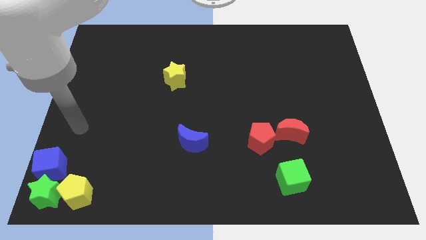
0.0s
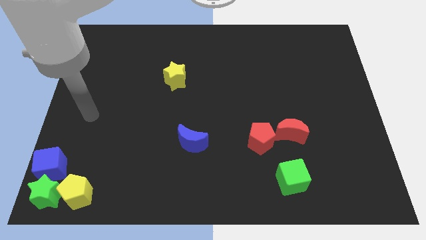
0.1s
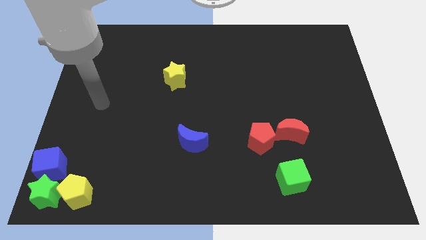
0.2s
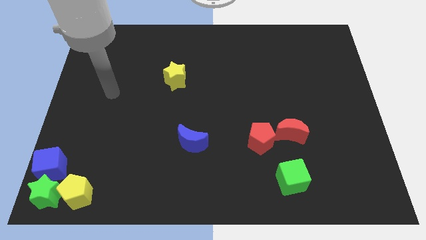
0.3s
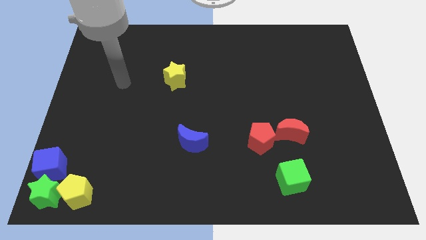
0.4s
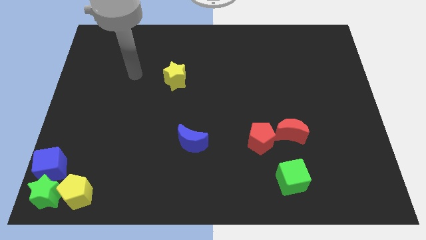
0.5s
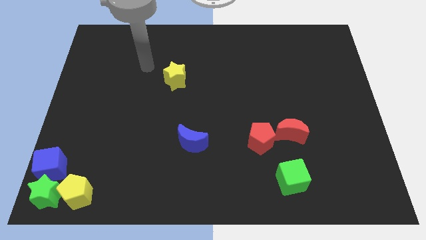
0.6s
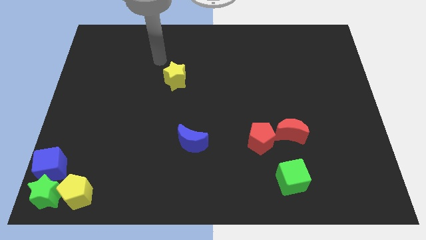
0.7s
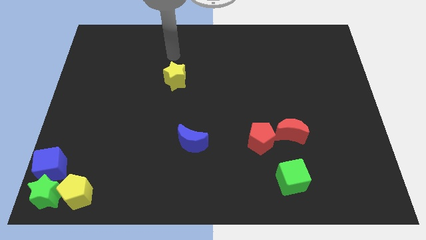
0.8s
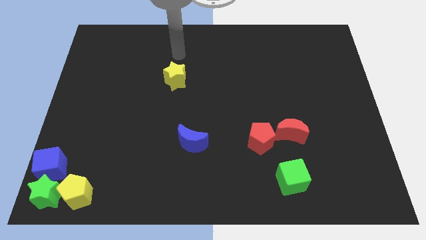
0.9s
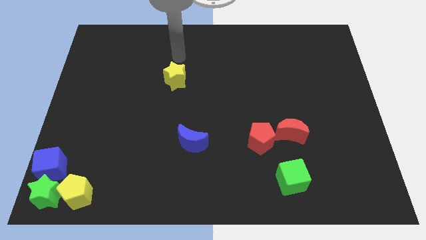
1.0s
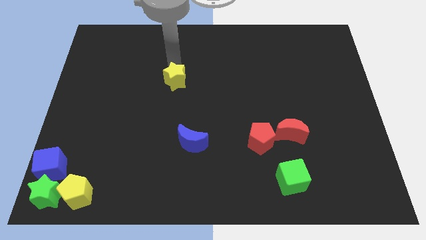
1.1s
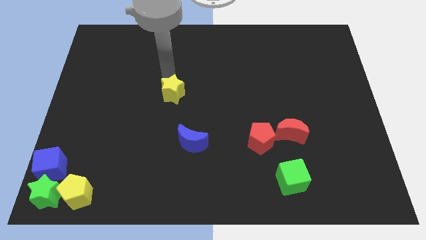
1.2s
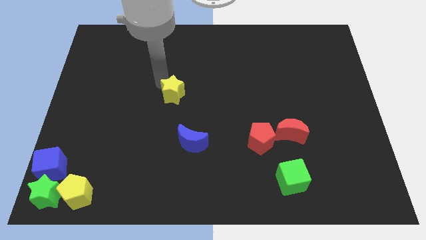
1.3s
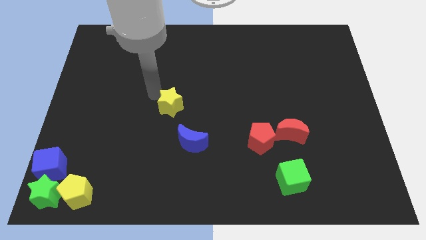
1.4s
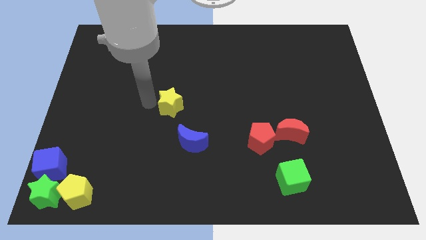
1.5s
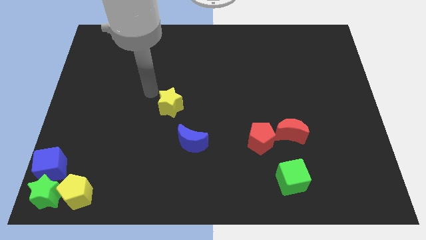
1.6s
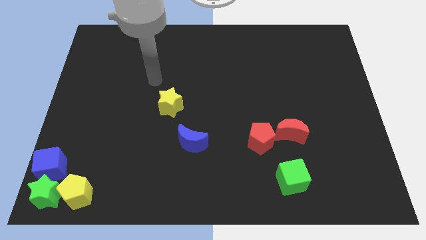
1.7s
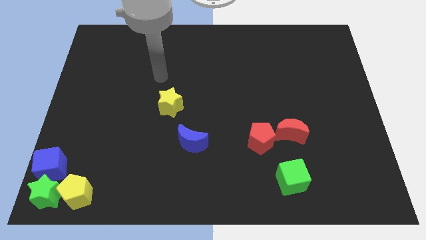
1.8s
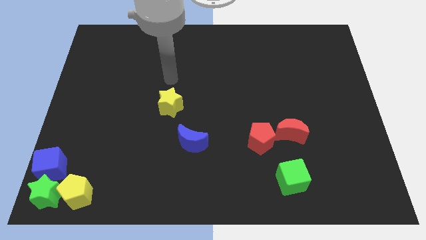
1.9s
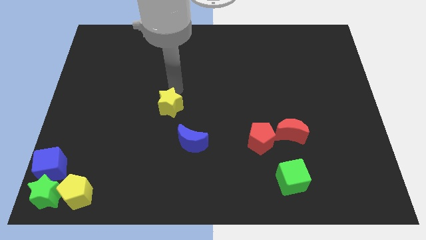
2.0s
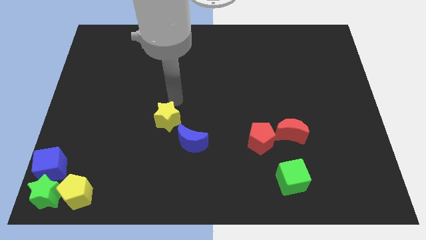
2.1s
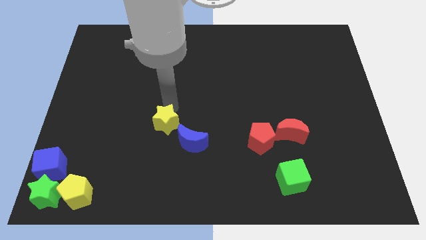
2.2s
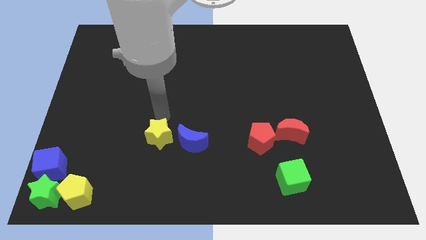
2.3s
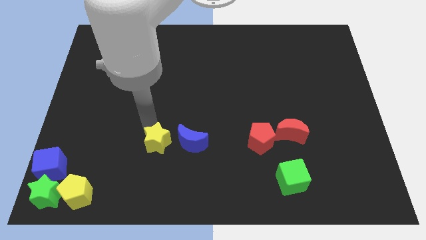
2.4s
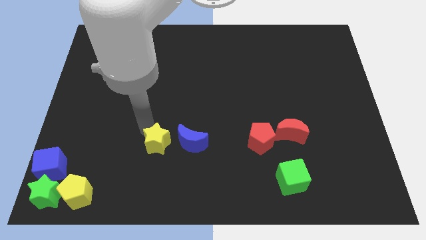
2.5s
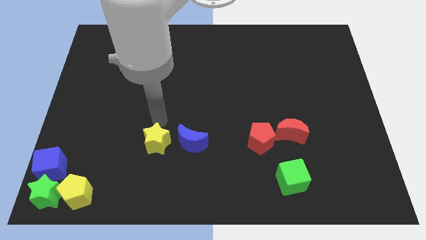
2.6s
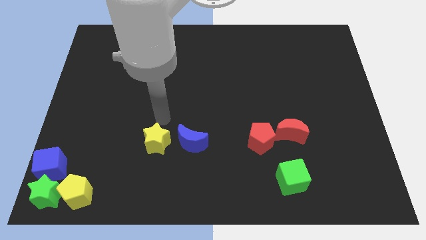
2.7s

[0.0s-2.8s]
push yellow star beside blue crescent

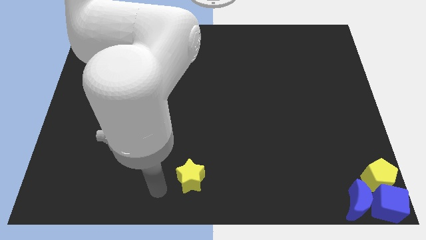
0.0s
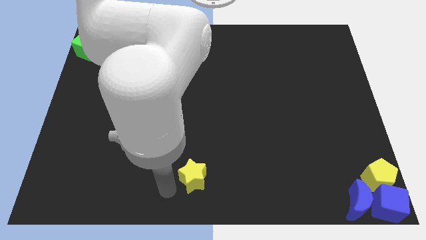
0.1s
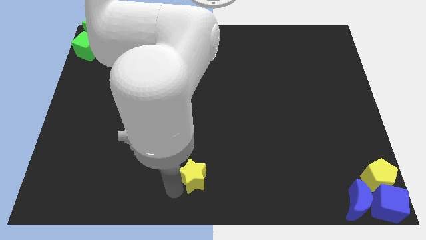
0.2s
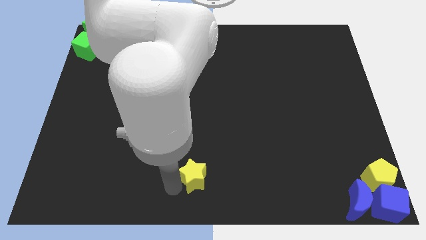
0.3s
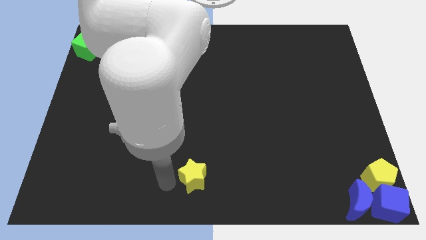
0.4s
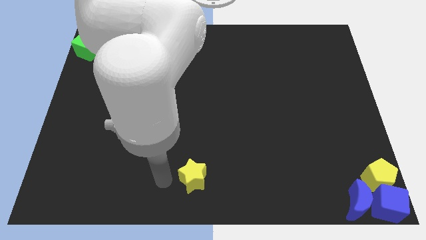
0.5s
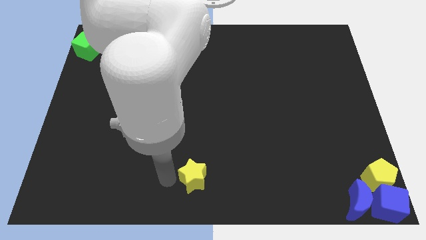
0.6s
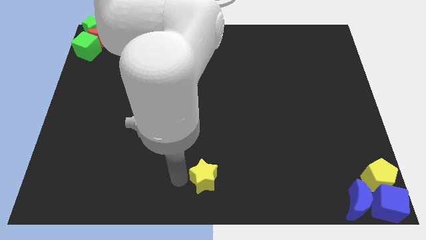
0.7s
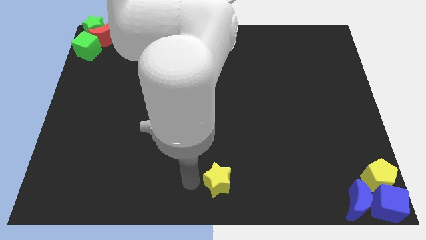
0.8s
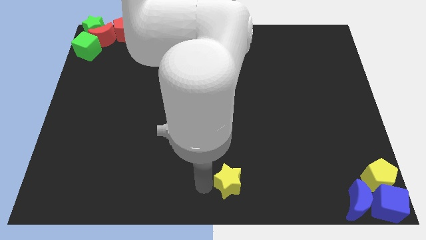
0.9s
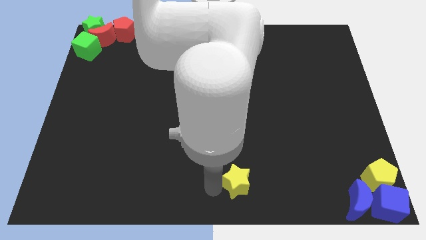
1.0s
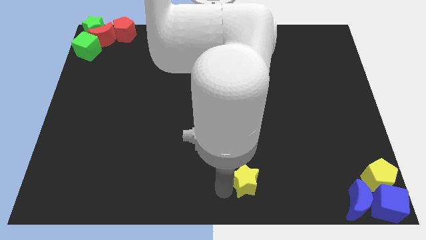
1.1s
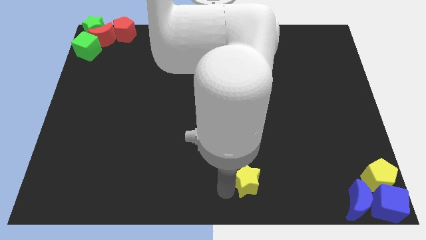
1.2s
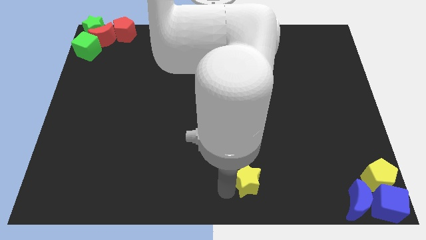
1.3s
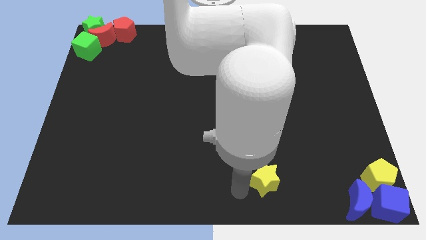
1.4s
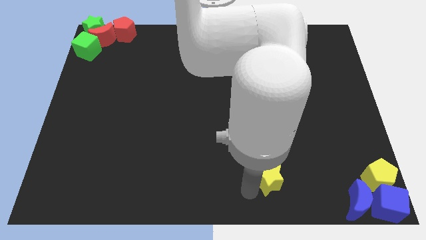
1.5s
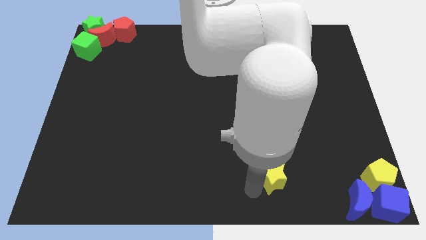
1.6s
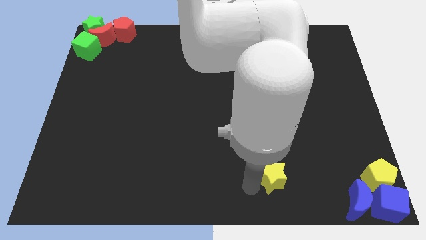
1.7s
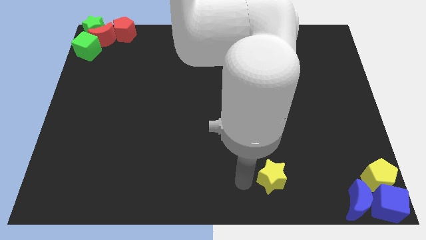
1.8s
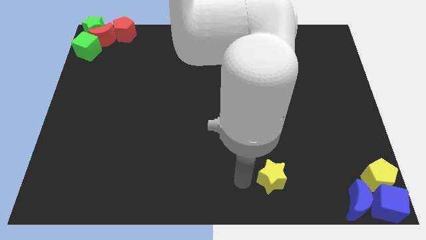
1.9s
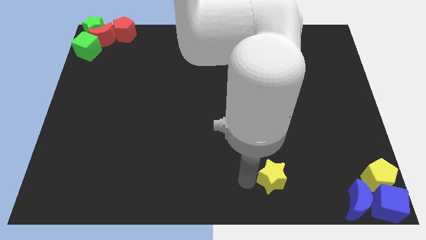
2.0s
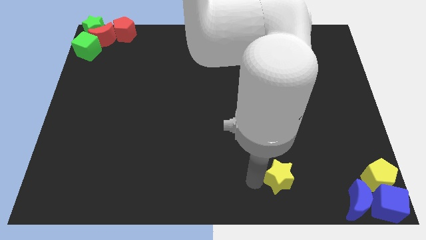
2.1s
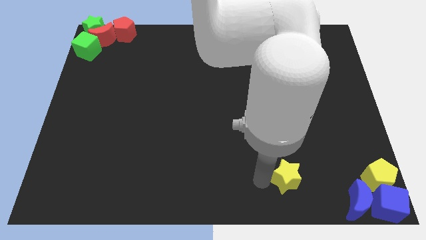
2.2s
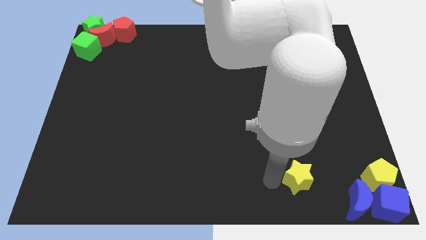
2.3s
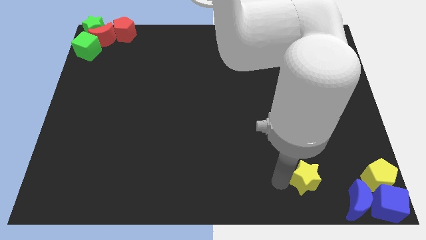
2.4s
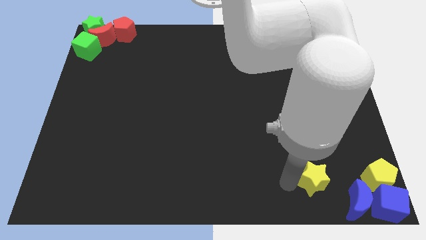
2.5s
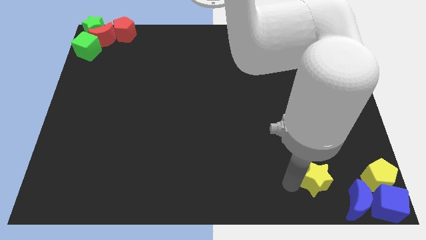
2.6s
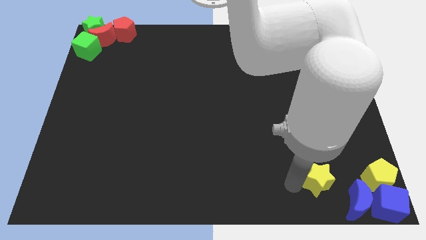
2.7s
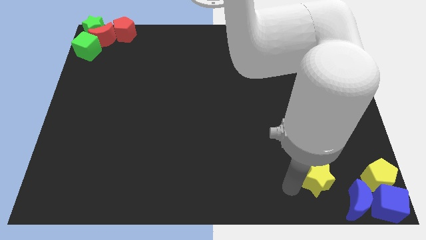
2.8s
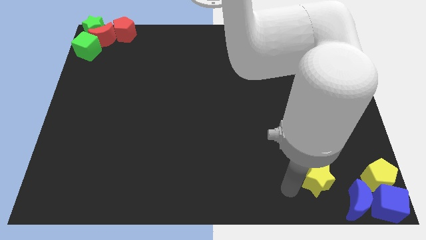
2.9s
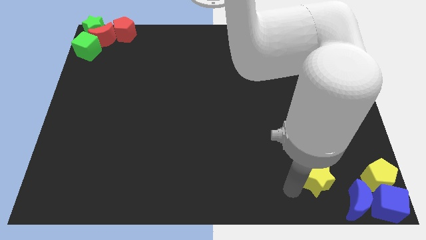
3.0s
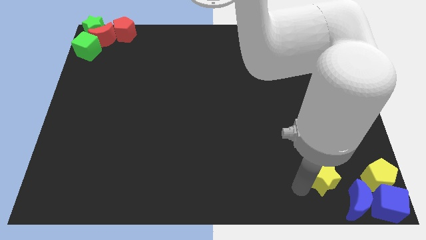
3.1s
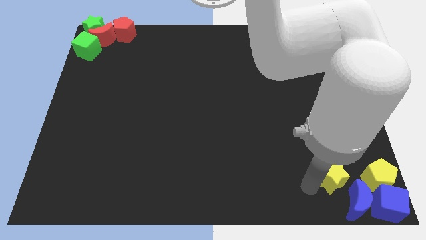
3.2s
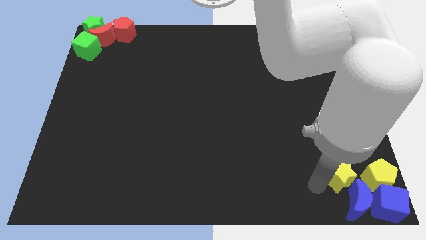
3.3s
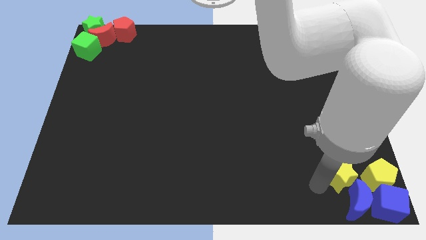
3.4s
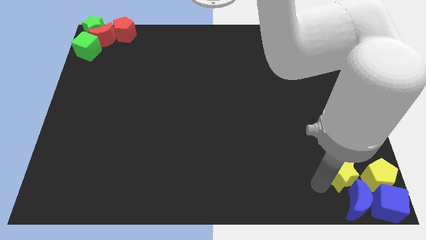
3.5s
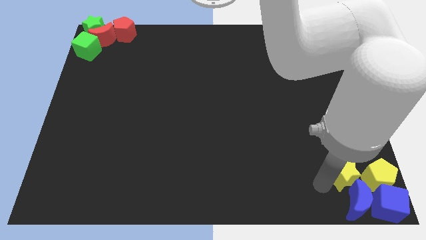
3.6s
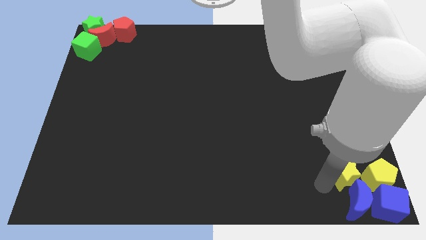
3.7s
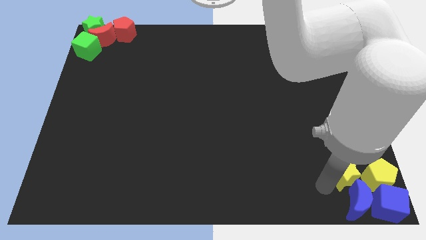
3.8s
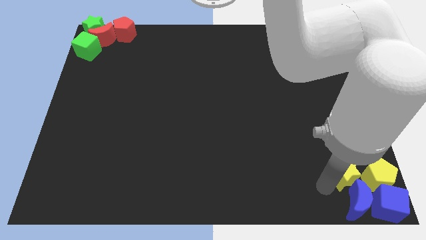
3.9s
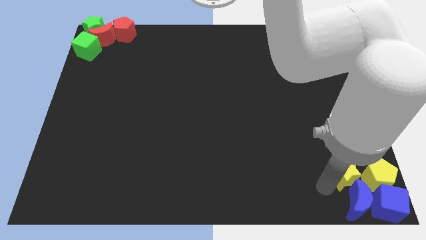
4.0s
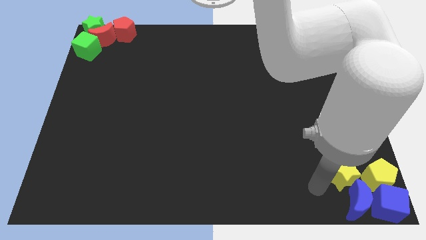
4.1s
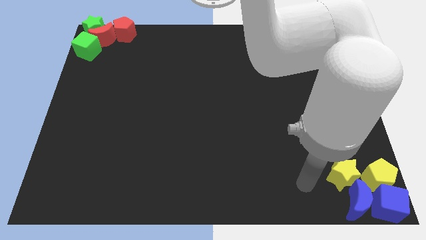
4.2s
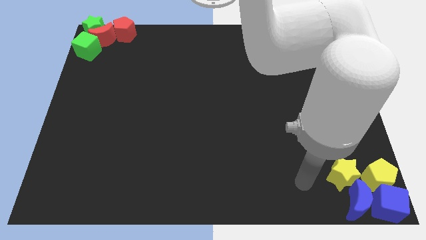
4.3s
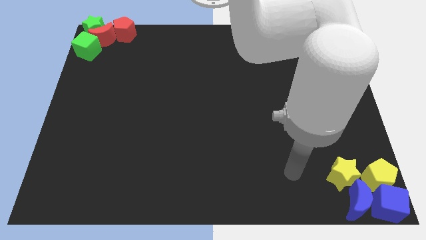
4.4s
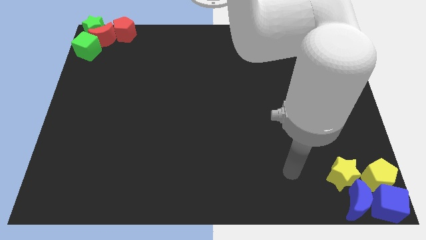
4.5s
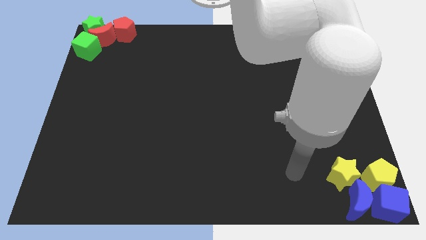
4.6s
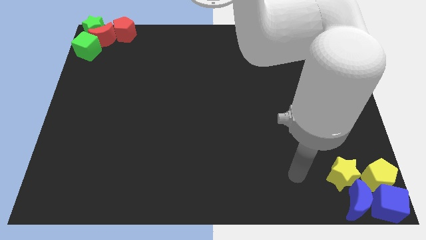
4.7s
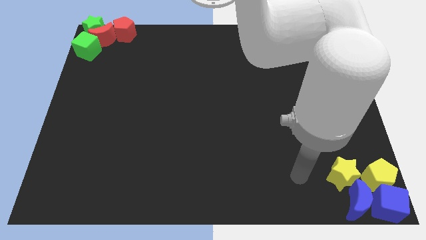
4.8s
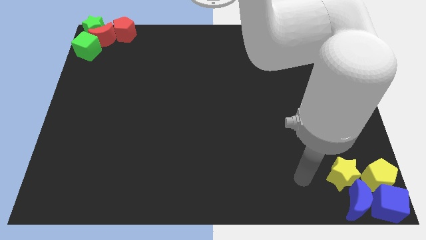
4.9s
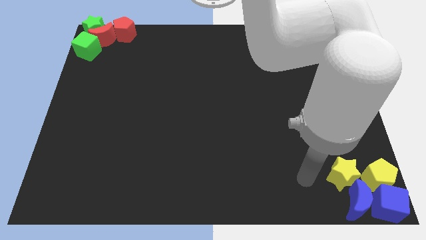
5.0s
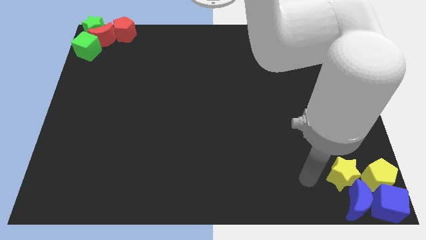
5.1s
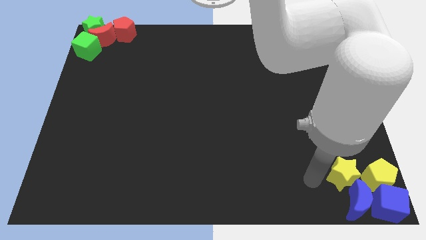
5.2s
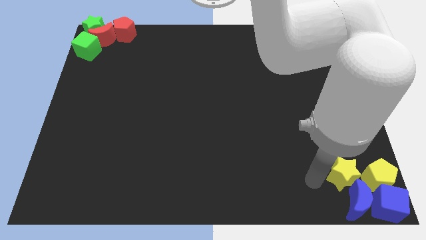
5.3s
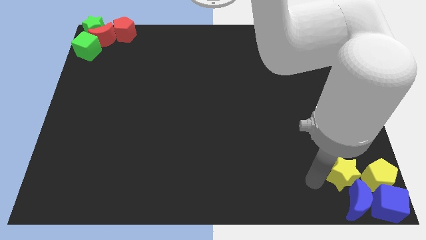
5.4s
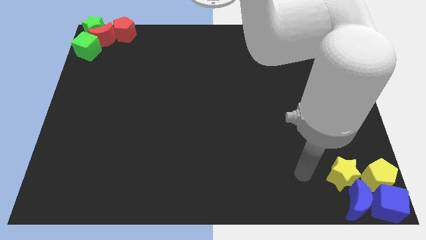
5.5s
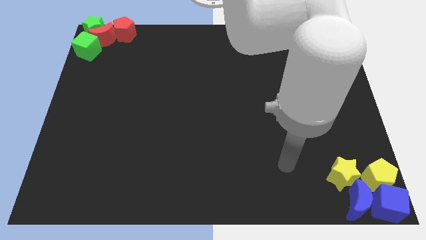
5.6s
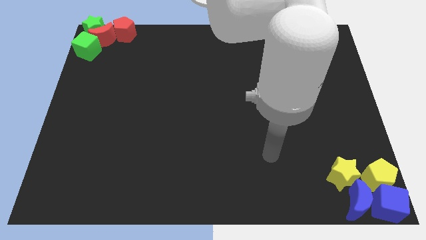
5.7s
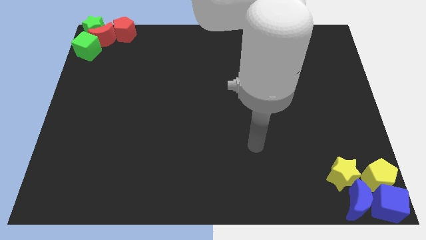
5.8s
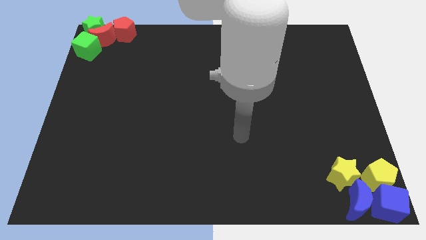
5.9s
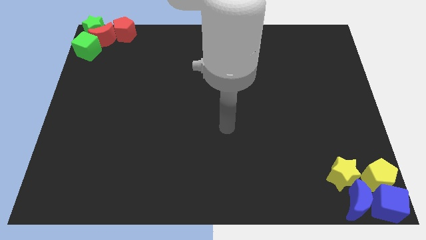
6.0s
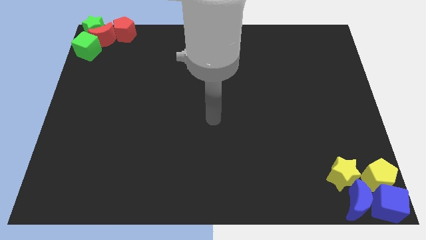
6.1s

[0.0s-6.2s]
push the yellow star into the yellow pentagon

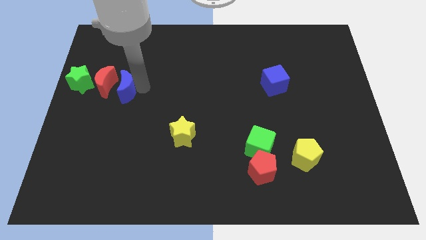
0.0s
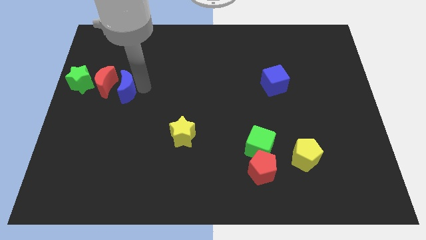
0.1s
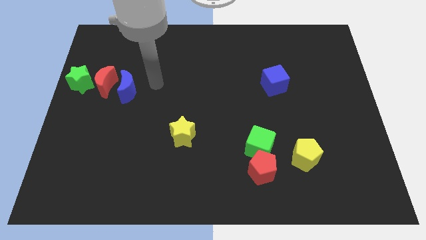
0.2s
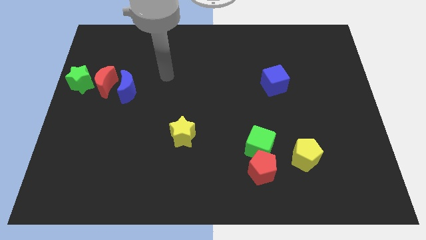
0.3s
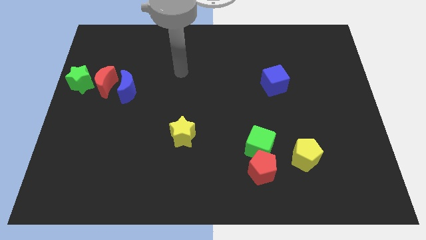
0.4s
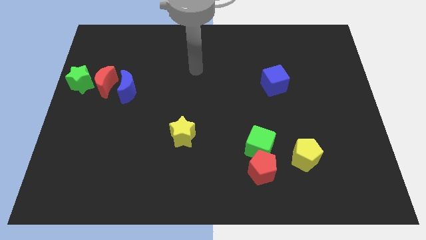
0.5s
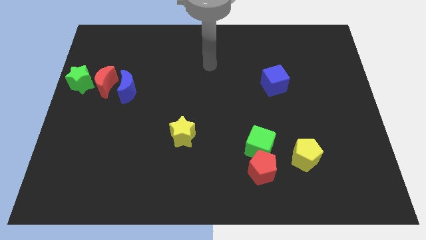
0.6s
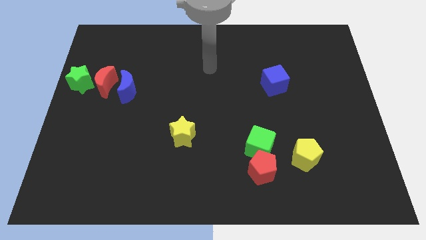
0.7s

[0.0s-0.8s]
move away from the blue moon
